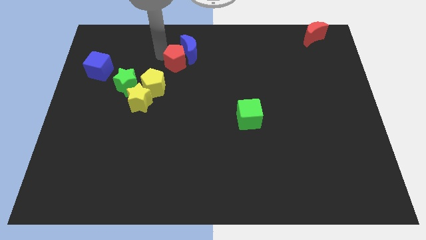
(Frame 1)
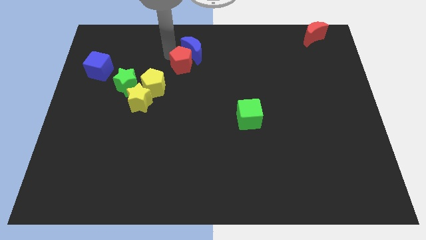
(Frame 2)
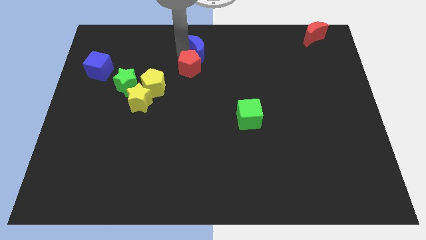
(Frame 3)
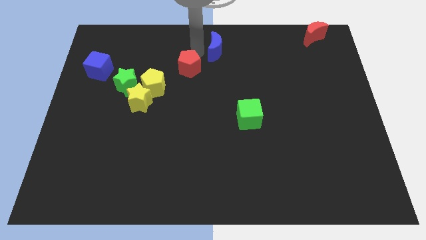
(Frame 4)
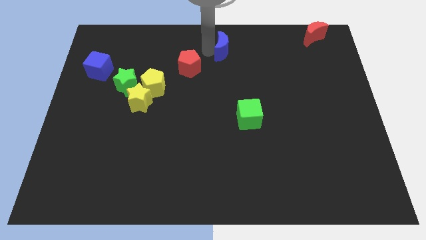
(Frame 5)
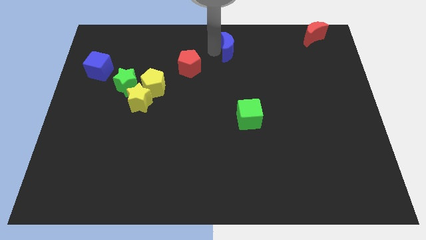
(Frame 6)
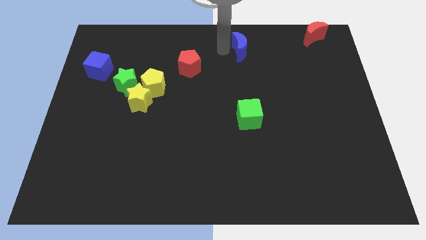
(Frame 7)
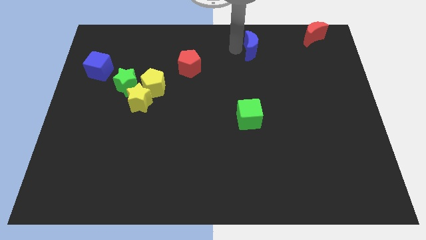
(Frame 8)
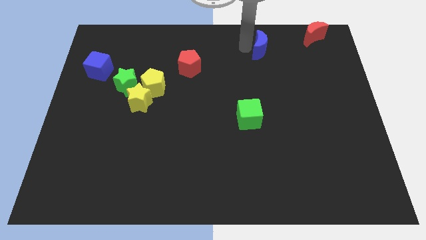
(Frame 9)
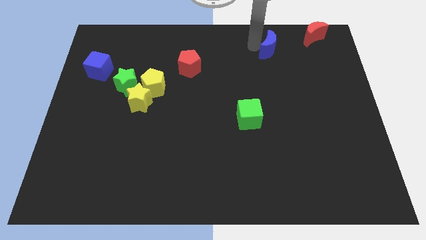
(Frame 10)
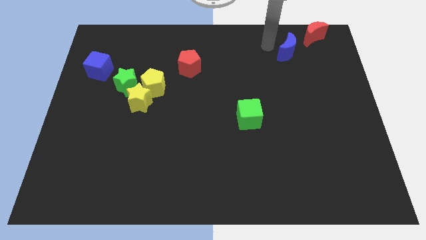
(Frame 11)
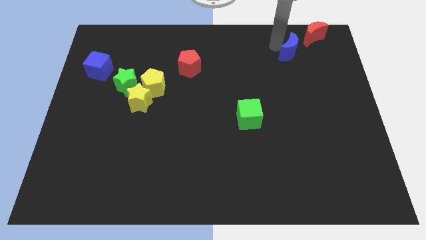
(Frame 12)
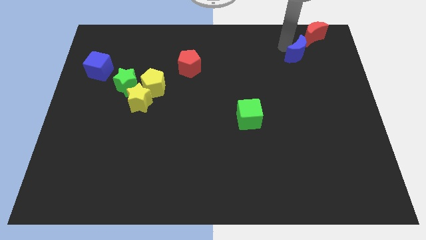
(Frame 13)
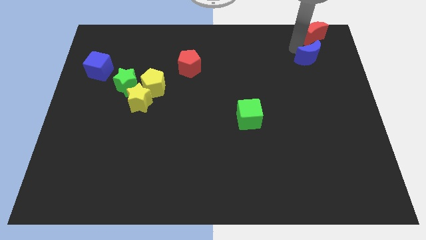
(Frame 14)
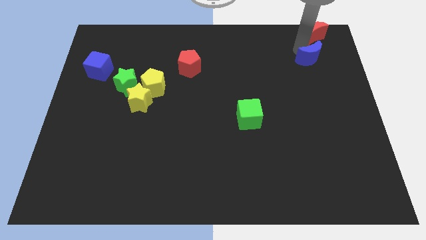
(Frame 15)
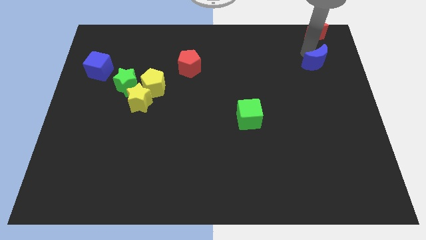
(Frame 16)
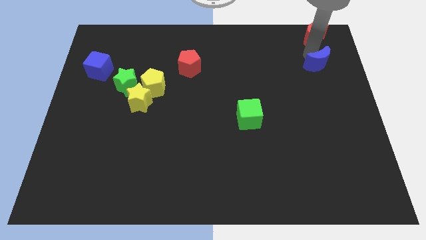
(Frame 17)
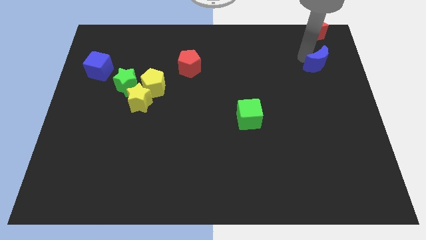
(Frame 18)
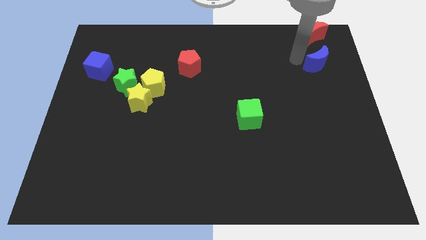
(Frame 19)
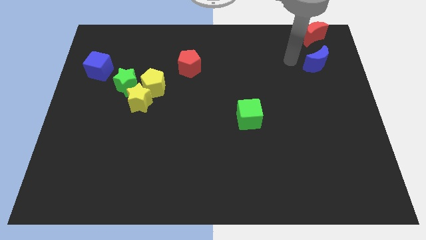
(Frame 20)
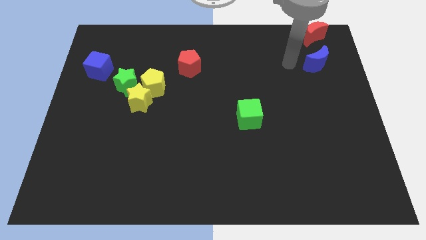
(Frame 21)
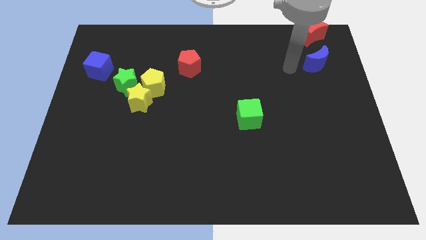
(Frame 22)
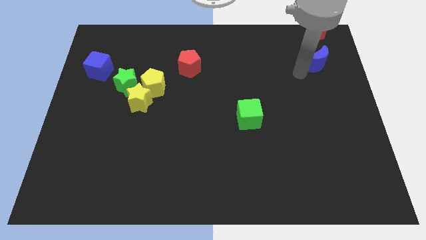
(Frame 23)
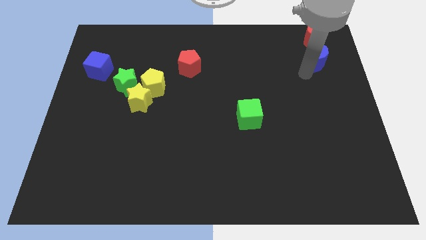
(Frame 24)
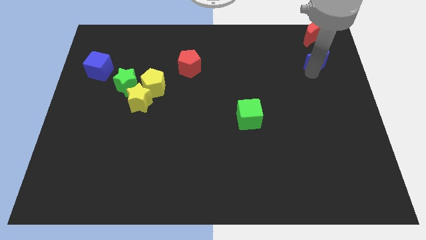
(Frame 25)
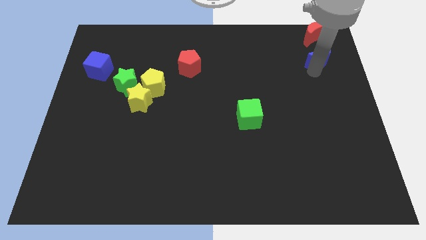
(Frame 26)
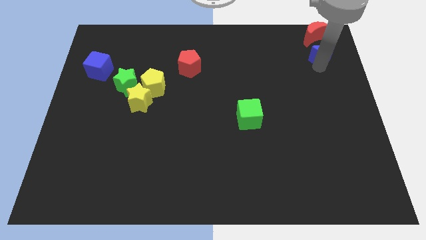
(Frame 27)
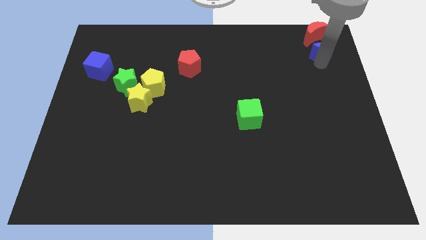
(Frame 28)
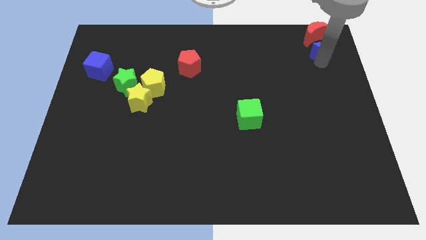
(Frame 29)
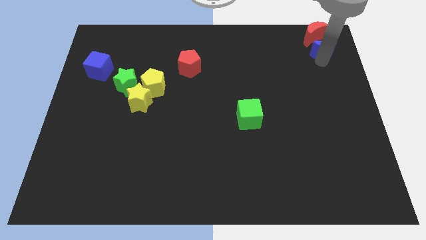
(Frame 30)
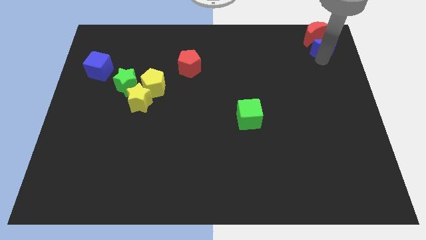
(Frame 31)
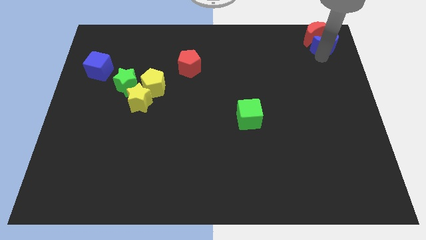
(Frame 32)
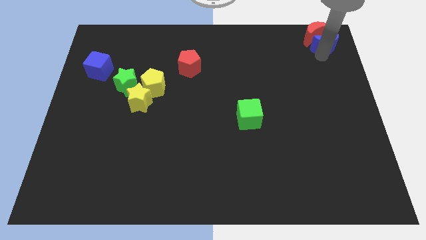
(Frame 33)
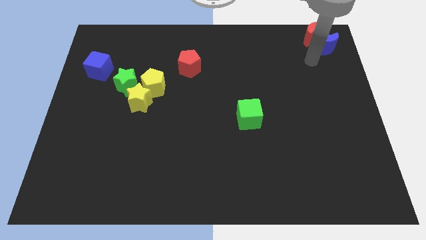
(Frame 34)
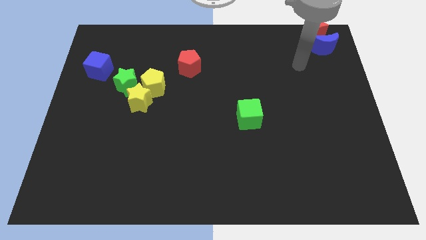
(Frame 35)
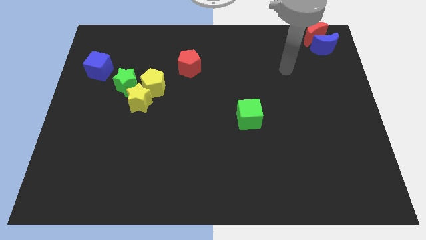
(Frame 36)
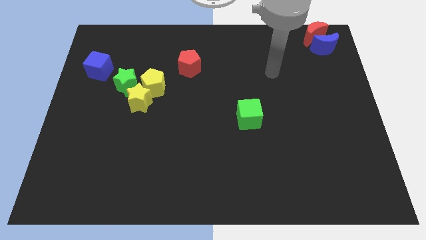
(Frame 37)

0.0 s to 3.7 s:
push the blue moon to the bottom side of the red moon

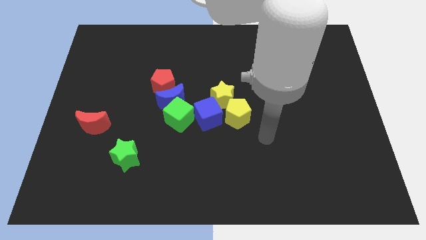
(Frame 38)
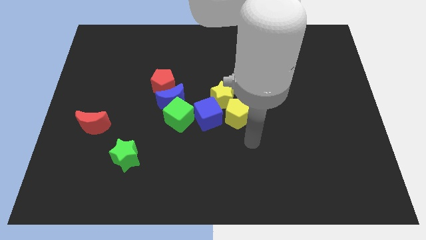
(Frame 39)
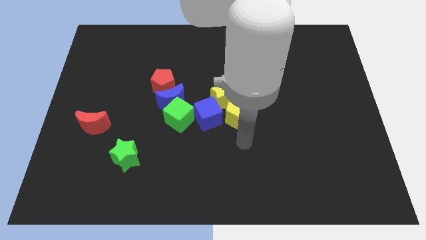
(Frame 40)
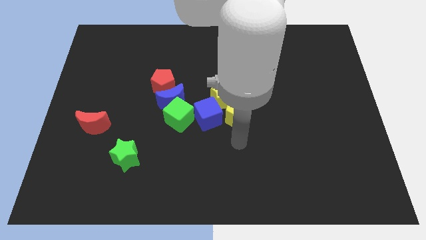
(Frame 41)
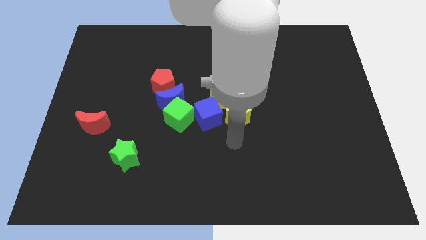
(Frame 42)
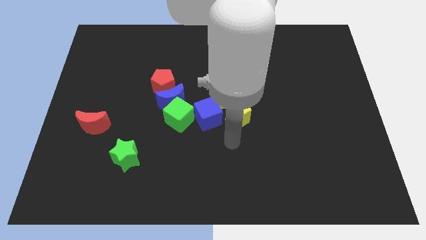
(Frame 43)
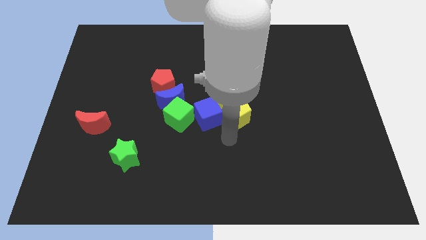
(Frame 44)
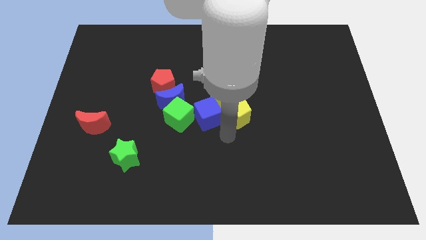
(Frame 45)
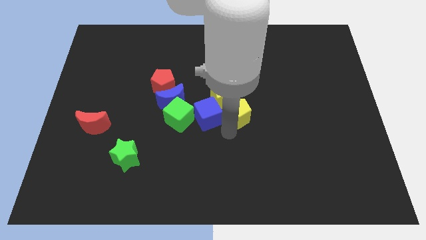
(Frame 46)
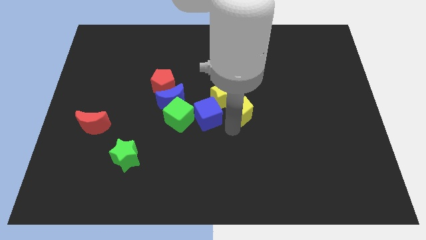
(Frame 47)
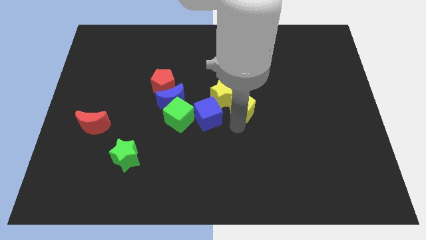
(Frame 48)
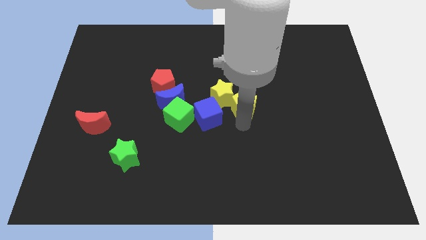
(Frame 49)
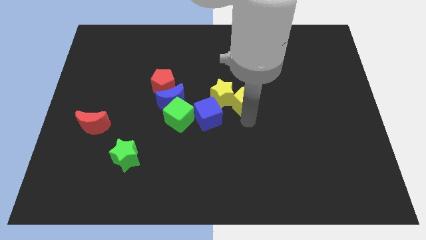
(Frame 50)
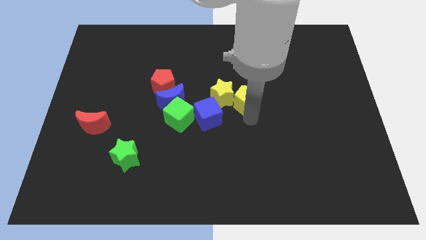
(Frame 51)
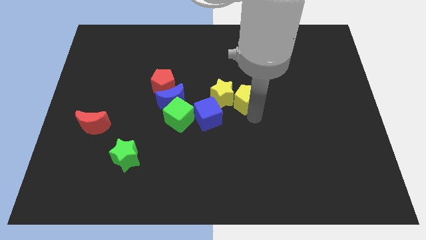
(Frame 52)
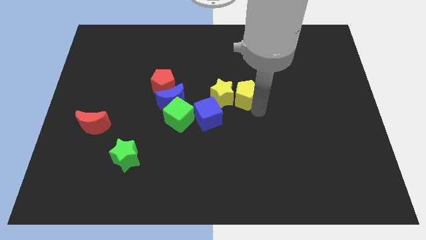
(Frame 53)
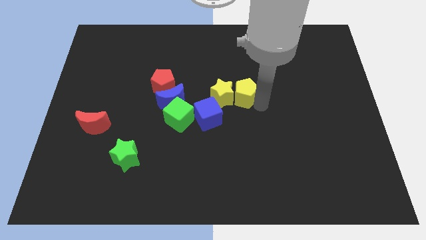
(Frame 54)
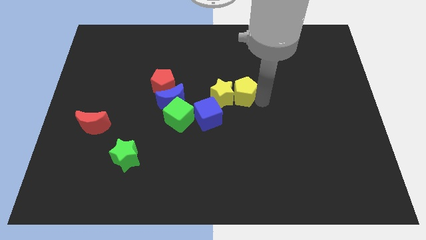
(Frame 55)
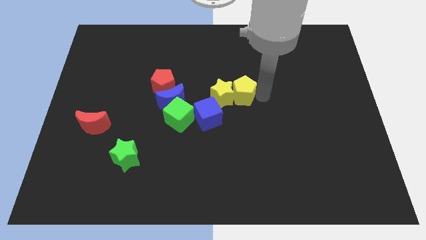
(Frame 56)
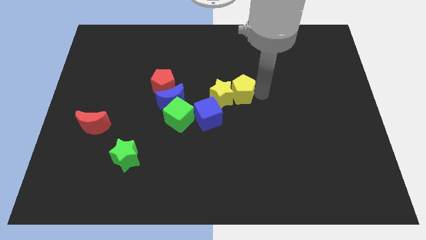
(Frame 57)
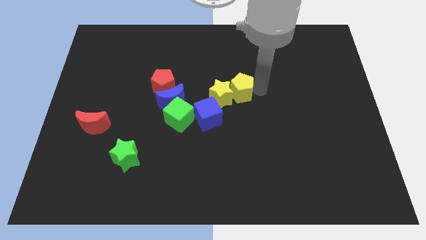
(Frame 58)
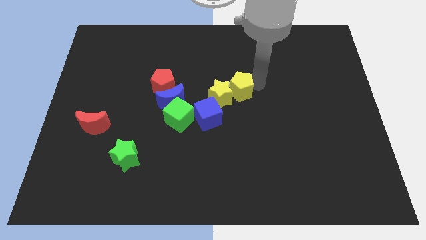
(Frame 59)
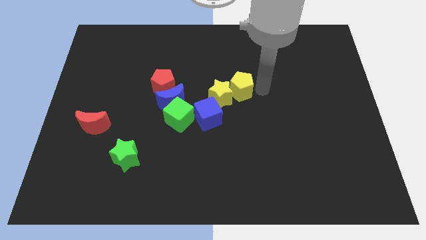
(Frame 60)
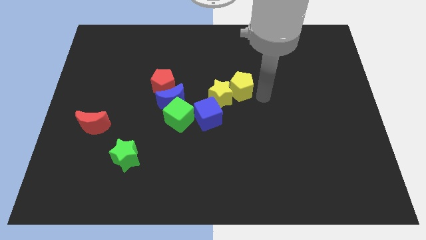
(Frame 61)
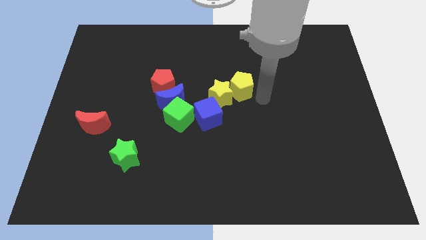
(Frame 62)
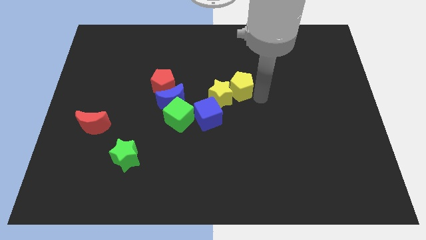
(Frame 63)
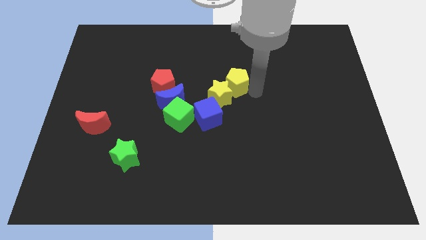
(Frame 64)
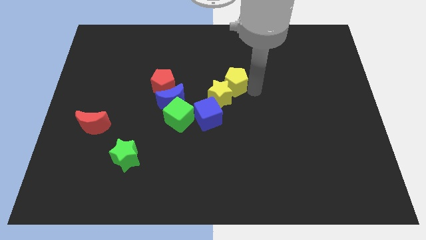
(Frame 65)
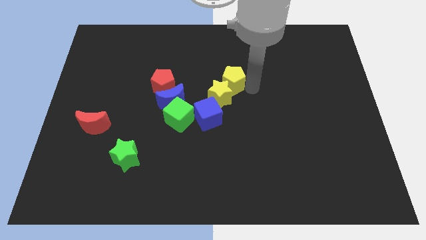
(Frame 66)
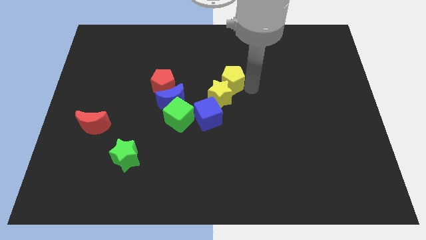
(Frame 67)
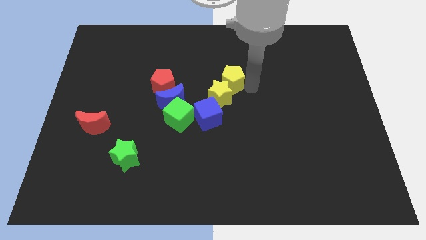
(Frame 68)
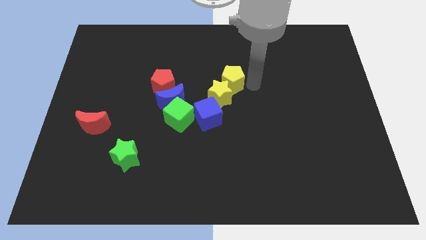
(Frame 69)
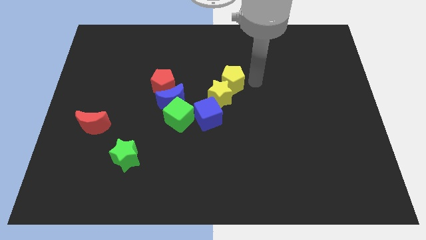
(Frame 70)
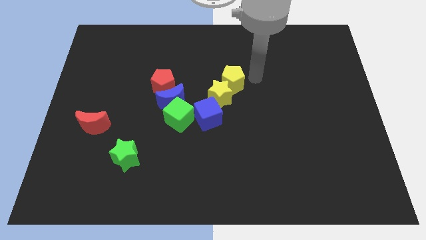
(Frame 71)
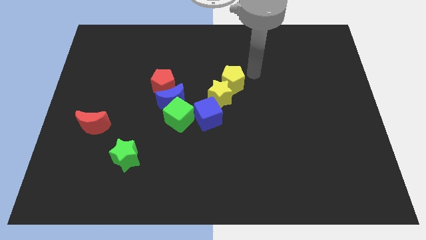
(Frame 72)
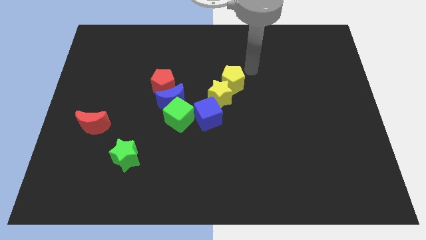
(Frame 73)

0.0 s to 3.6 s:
place the yellow pentagon at the top right side of the yellow star

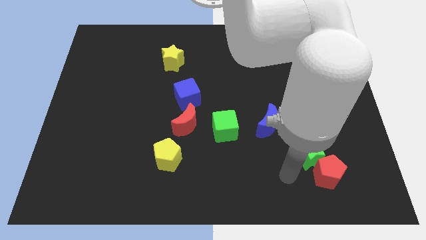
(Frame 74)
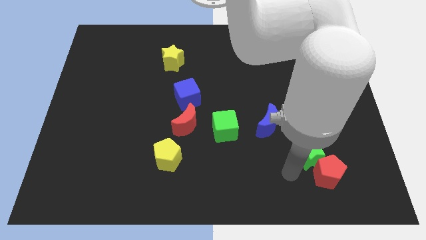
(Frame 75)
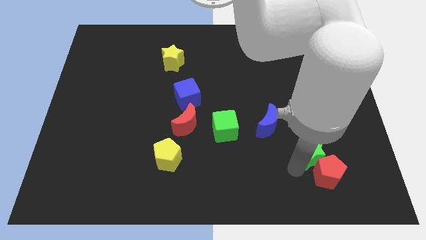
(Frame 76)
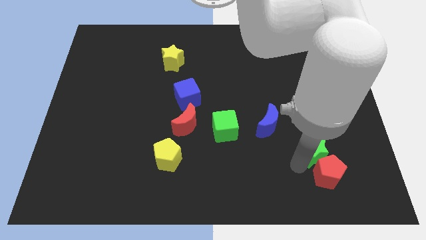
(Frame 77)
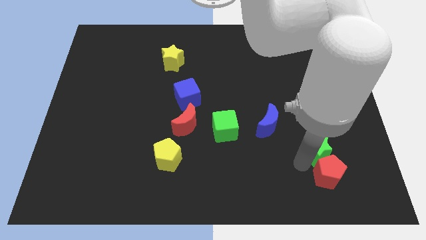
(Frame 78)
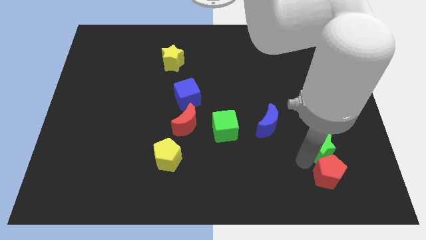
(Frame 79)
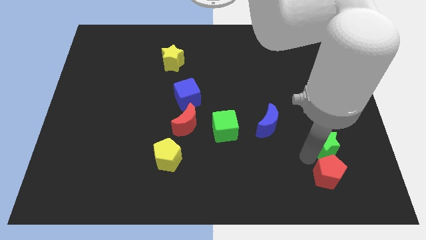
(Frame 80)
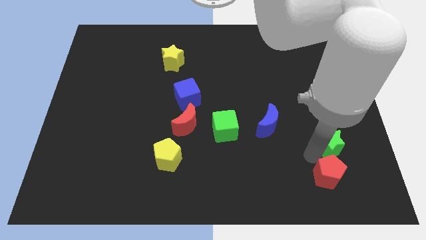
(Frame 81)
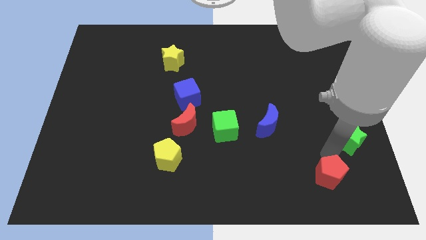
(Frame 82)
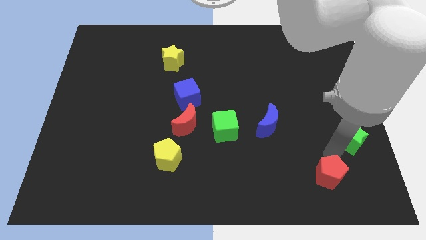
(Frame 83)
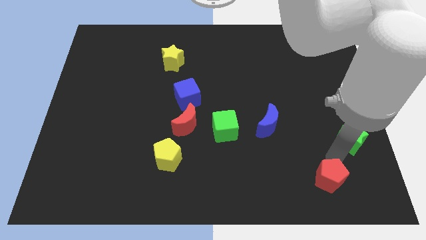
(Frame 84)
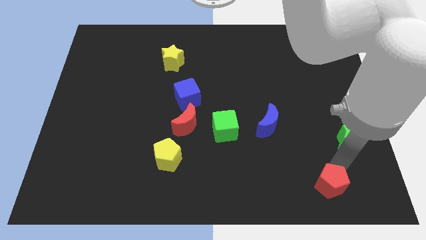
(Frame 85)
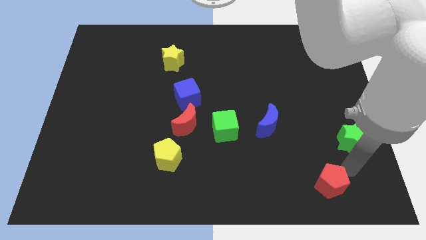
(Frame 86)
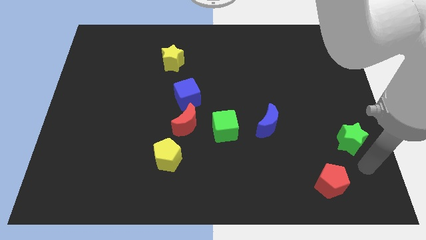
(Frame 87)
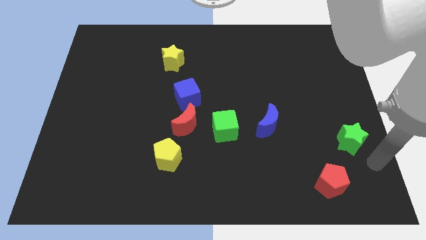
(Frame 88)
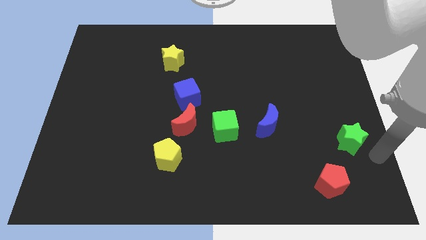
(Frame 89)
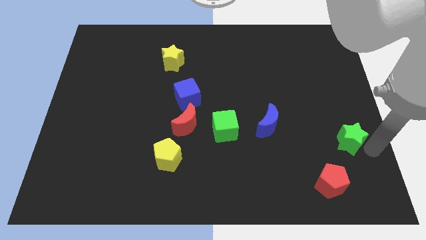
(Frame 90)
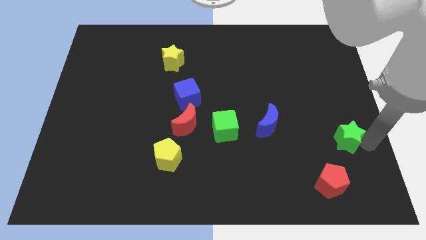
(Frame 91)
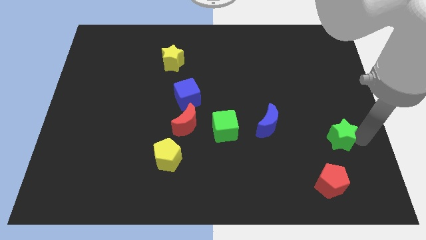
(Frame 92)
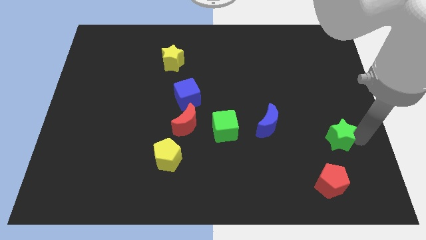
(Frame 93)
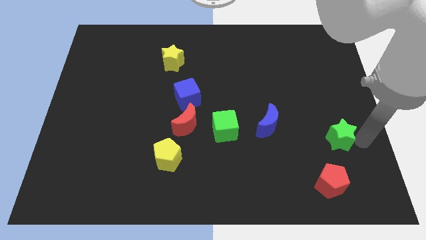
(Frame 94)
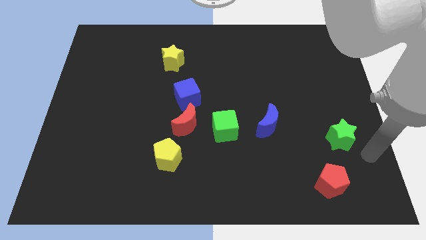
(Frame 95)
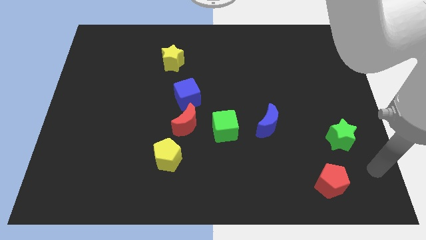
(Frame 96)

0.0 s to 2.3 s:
separate the green star from the red pentagon
